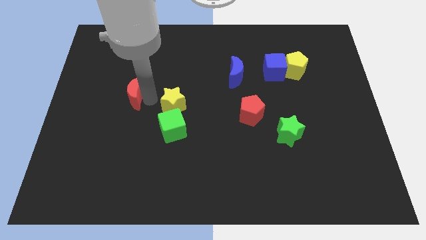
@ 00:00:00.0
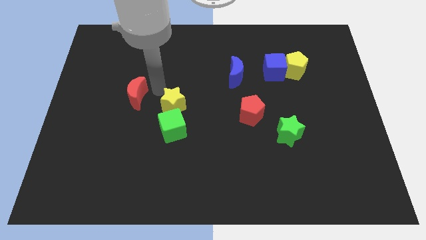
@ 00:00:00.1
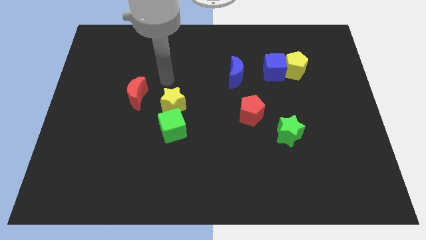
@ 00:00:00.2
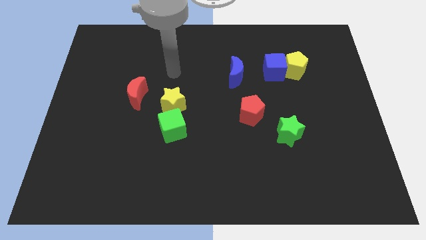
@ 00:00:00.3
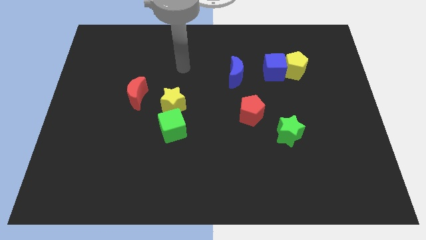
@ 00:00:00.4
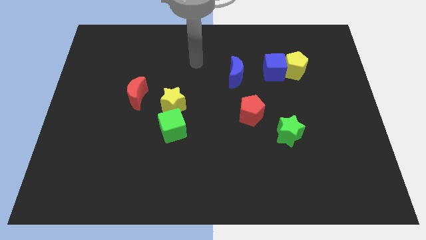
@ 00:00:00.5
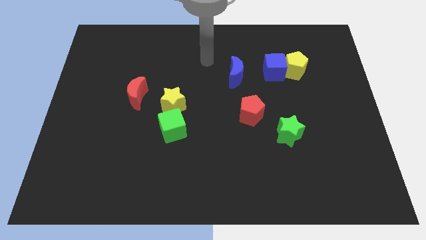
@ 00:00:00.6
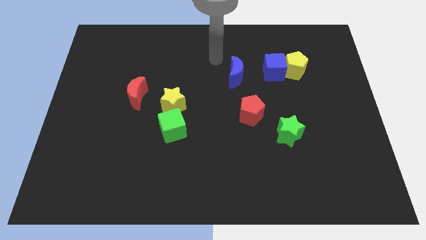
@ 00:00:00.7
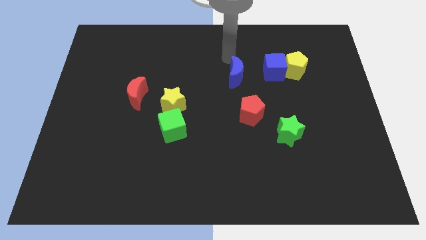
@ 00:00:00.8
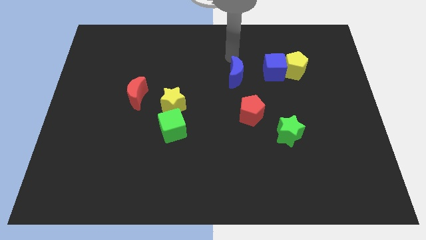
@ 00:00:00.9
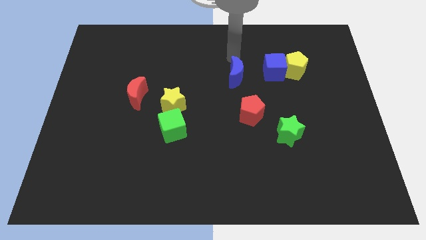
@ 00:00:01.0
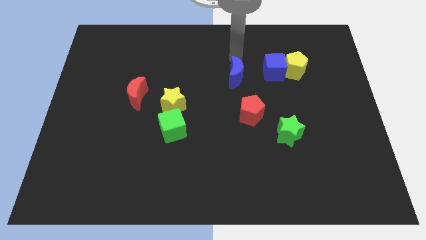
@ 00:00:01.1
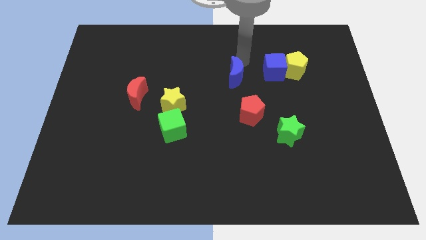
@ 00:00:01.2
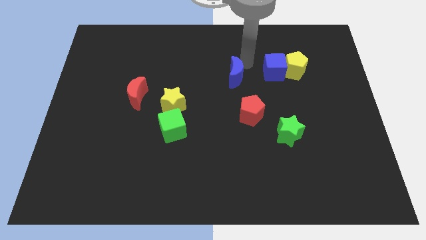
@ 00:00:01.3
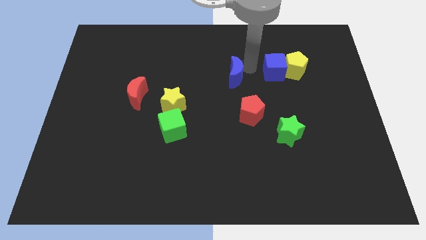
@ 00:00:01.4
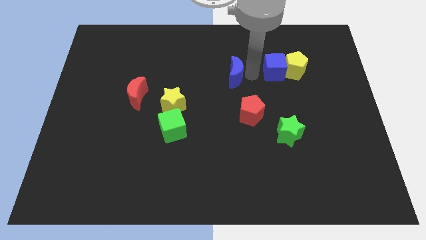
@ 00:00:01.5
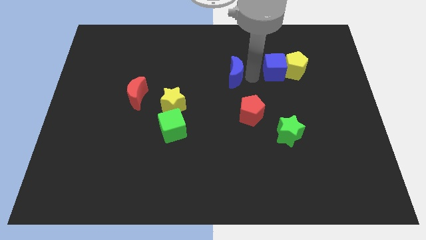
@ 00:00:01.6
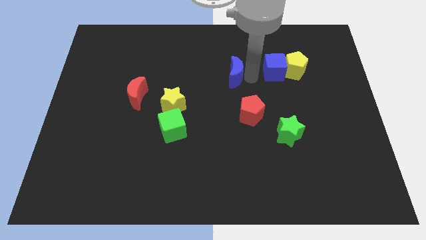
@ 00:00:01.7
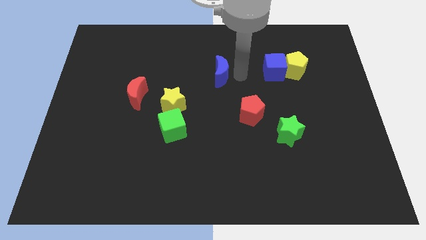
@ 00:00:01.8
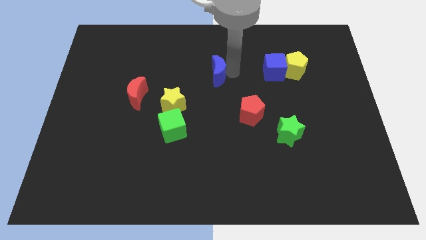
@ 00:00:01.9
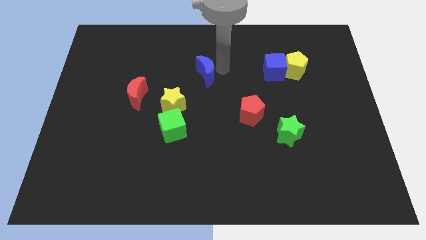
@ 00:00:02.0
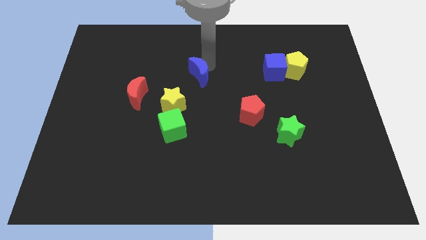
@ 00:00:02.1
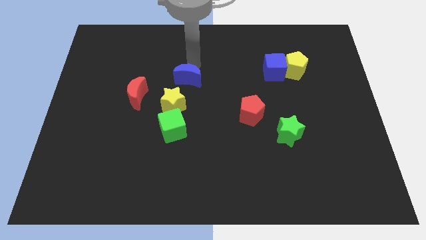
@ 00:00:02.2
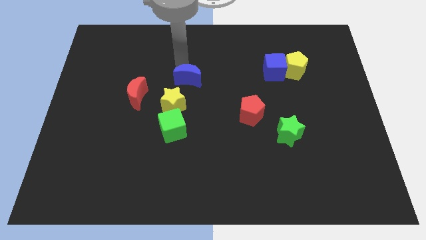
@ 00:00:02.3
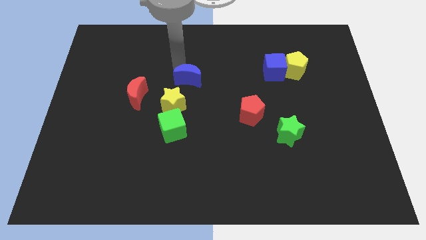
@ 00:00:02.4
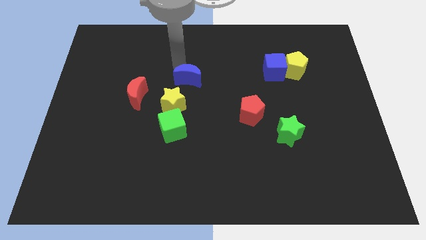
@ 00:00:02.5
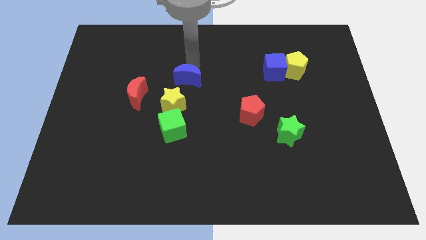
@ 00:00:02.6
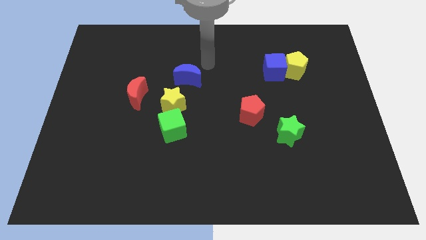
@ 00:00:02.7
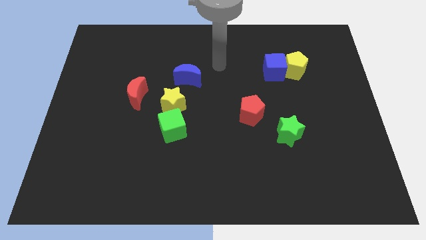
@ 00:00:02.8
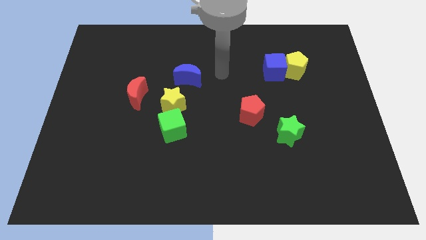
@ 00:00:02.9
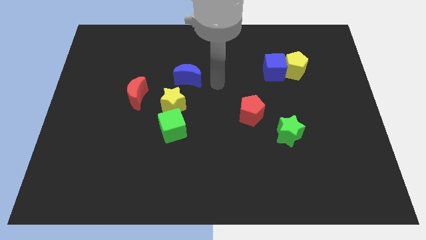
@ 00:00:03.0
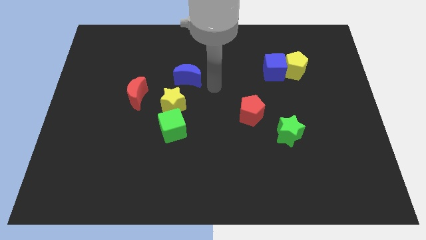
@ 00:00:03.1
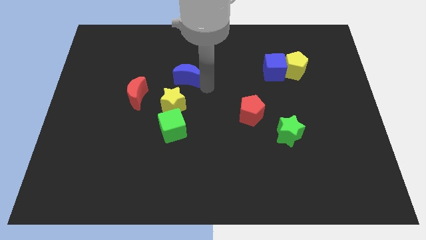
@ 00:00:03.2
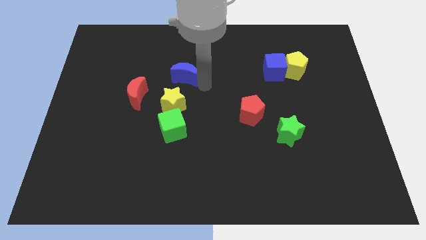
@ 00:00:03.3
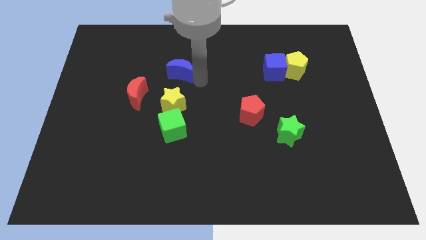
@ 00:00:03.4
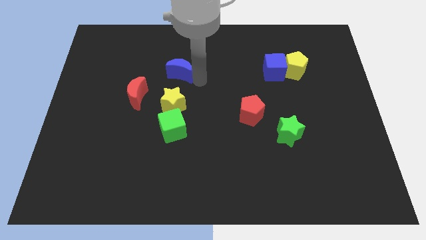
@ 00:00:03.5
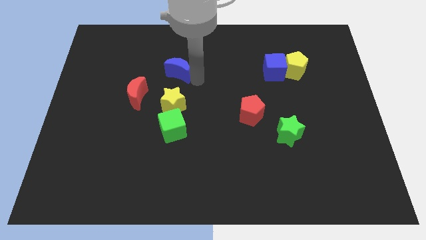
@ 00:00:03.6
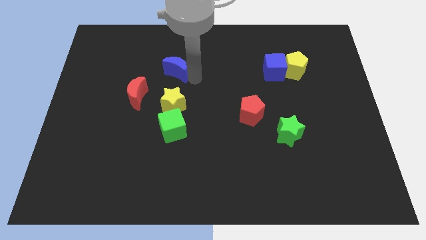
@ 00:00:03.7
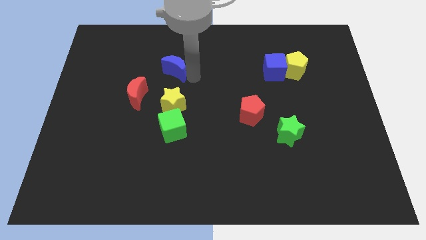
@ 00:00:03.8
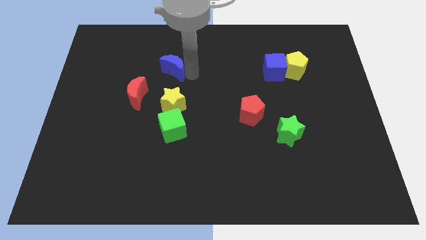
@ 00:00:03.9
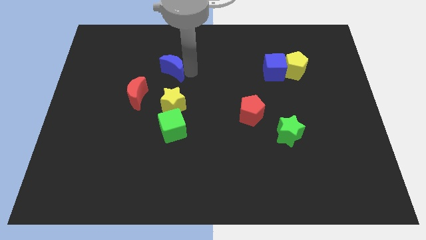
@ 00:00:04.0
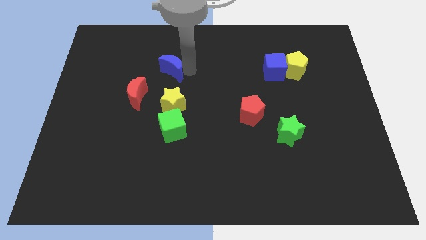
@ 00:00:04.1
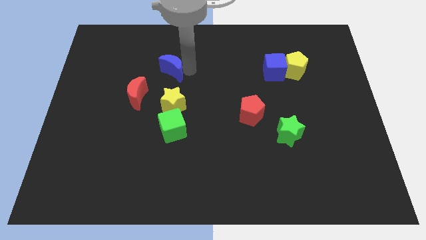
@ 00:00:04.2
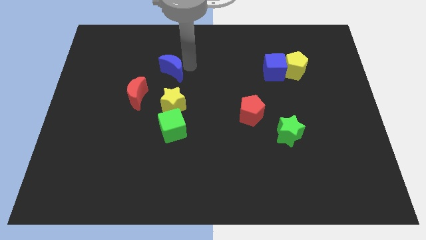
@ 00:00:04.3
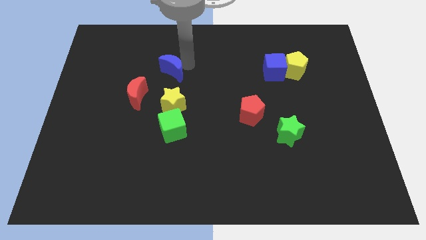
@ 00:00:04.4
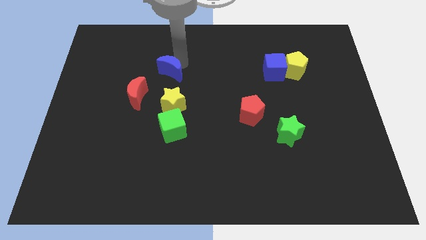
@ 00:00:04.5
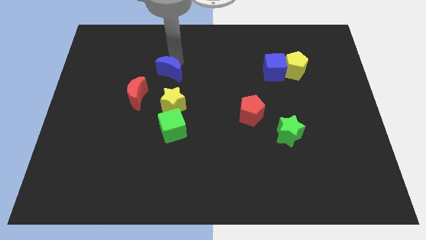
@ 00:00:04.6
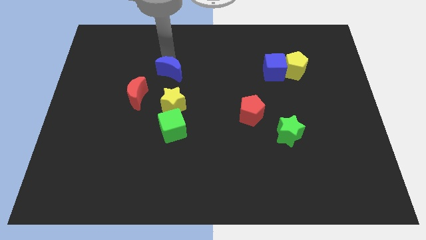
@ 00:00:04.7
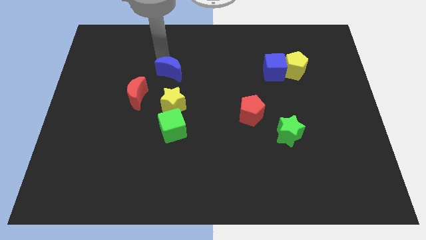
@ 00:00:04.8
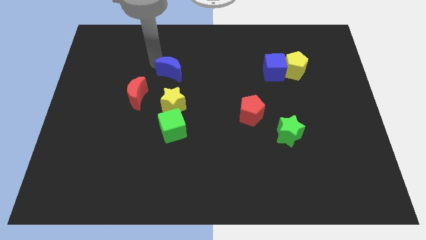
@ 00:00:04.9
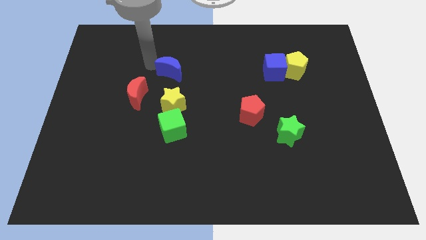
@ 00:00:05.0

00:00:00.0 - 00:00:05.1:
push the blue moon to the left side of the board

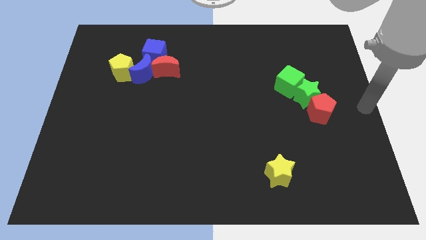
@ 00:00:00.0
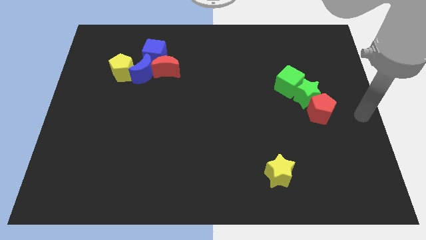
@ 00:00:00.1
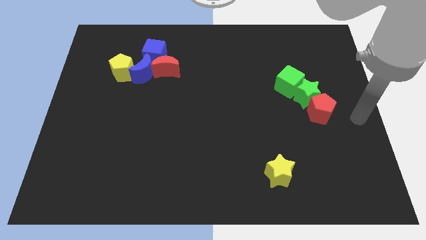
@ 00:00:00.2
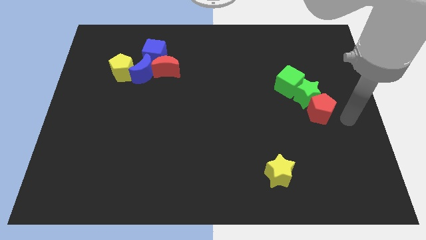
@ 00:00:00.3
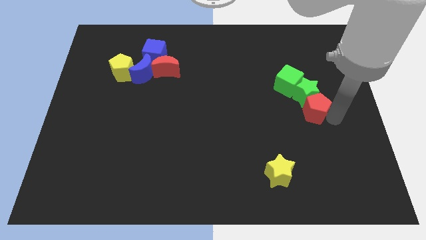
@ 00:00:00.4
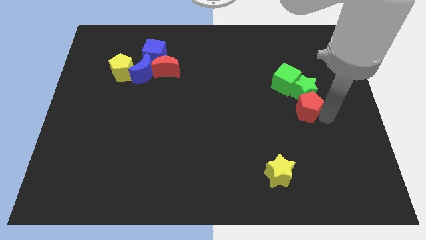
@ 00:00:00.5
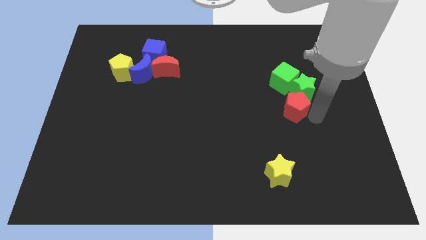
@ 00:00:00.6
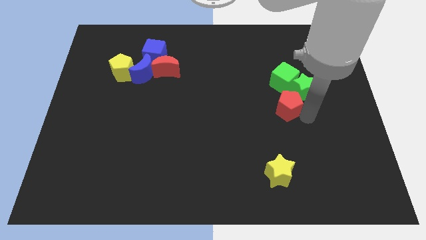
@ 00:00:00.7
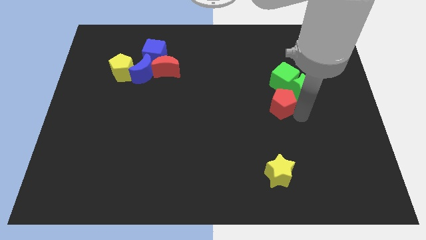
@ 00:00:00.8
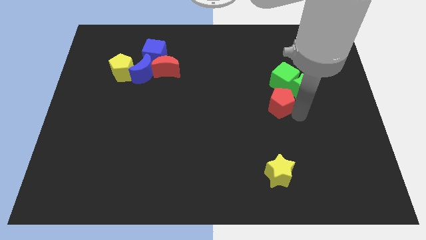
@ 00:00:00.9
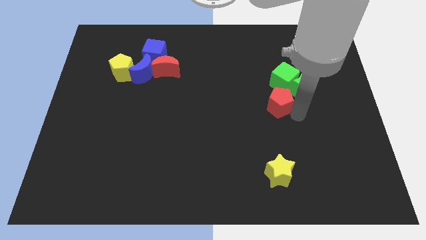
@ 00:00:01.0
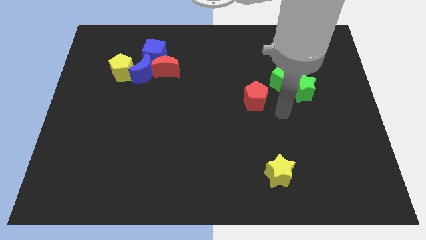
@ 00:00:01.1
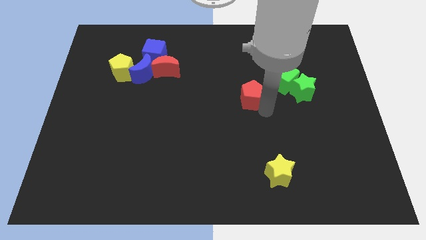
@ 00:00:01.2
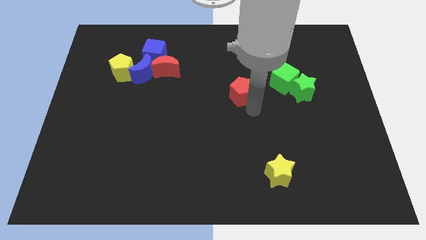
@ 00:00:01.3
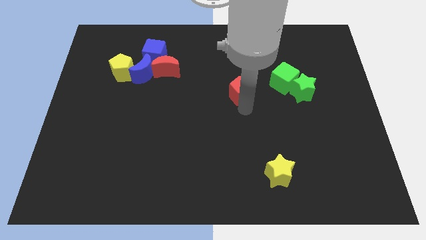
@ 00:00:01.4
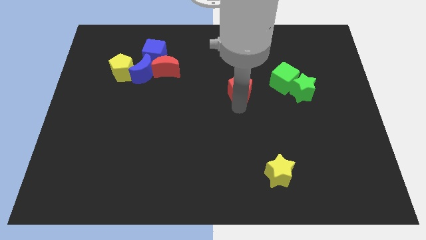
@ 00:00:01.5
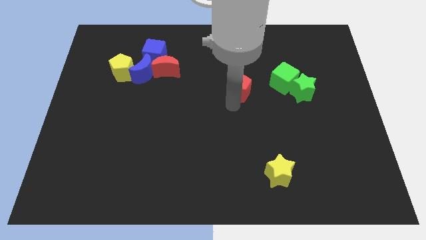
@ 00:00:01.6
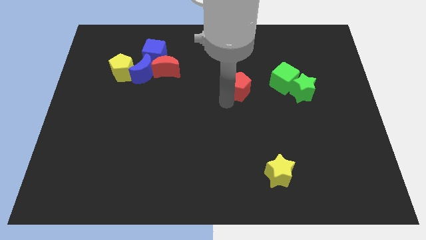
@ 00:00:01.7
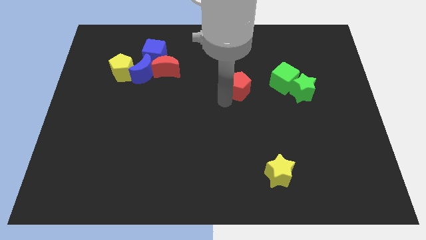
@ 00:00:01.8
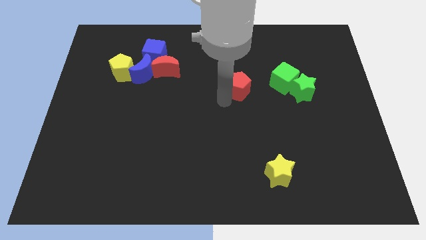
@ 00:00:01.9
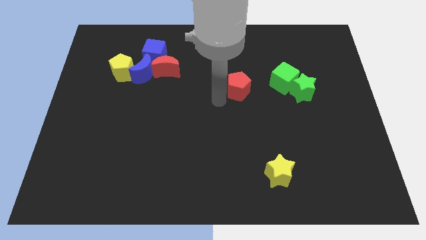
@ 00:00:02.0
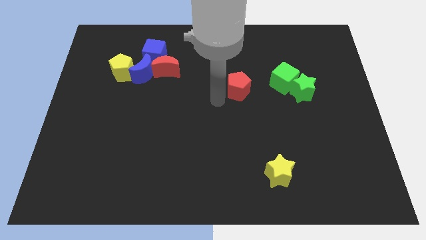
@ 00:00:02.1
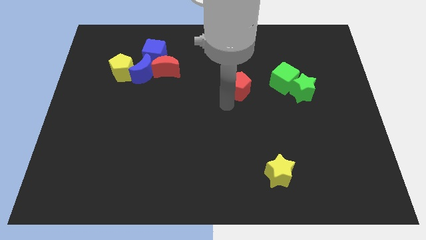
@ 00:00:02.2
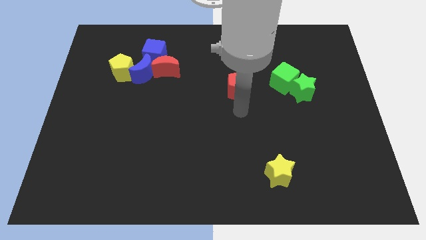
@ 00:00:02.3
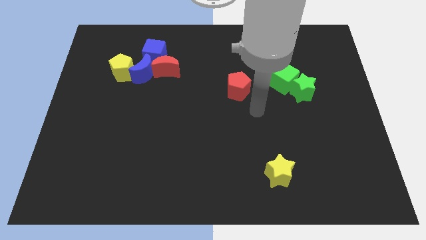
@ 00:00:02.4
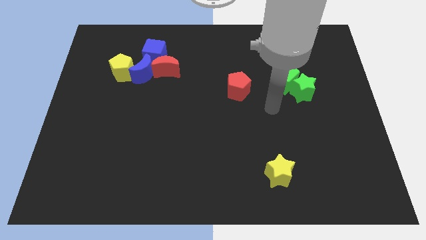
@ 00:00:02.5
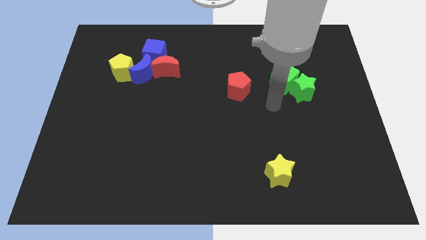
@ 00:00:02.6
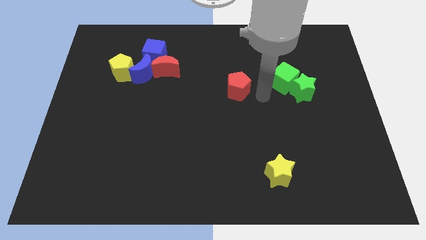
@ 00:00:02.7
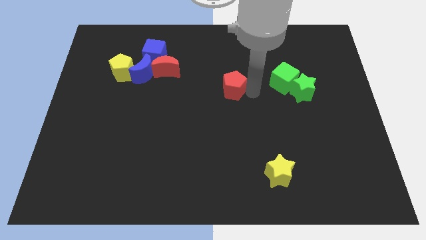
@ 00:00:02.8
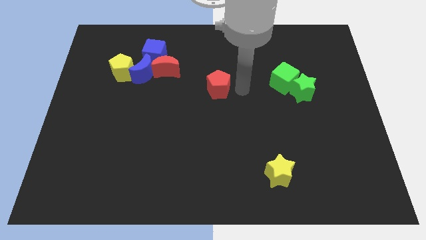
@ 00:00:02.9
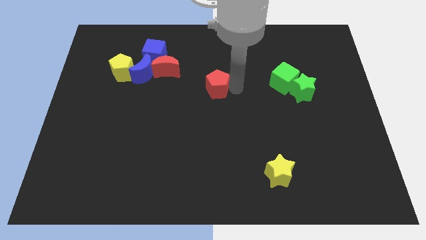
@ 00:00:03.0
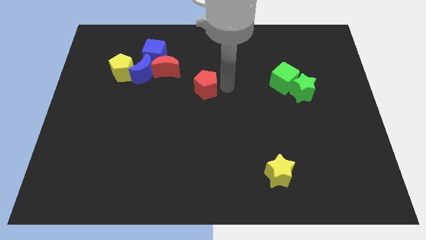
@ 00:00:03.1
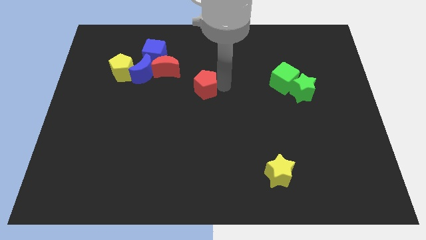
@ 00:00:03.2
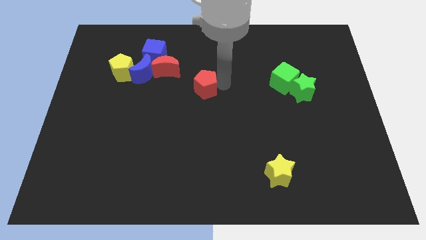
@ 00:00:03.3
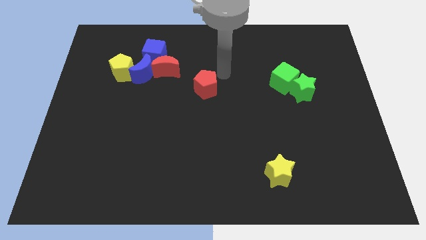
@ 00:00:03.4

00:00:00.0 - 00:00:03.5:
move the red pentagon diagonally to the top left of the yellow star

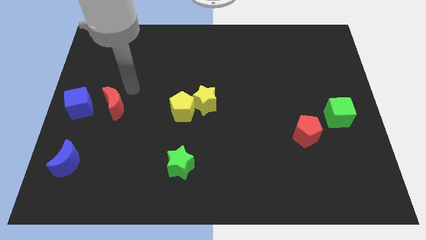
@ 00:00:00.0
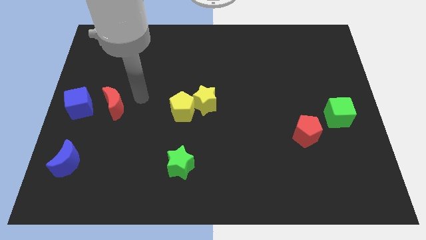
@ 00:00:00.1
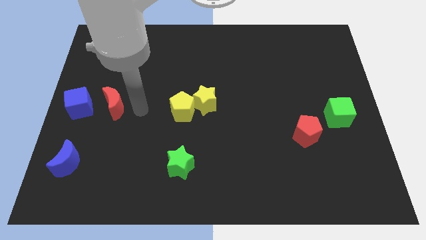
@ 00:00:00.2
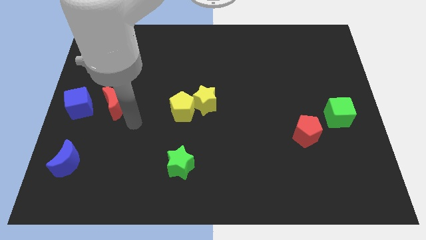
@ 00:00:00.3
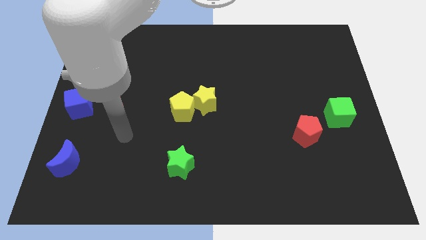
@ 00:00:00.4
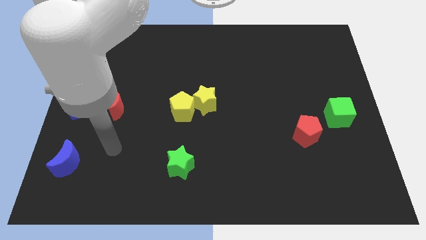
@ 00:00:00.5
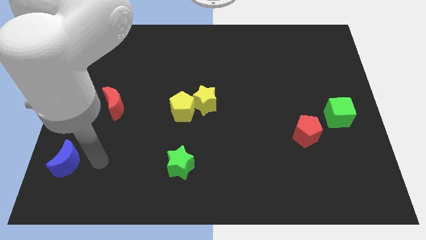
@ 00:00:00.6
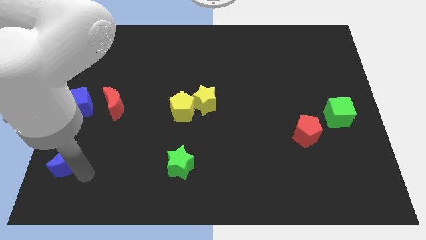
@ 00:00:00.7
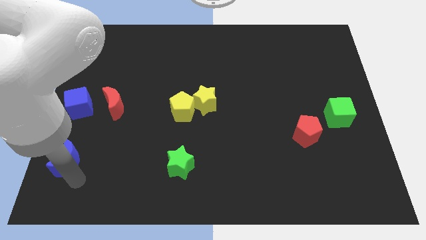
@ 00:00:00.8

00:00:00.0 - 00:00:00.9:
move your hand towards the blue crescent
